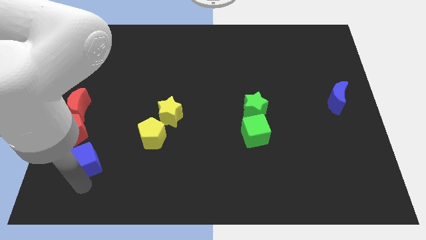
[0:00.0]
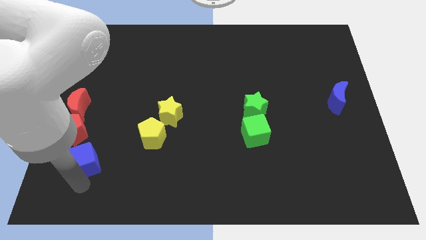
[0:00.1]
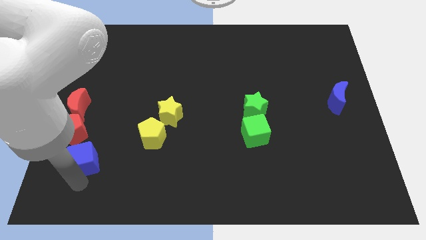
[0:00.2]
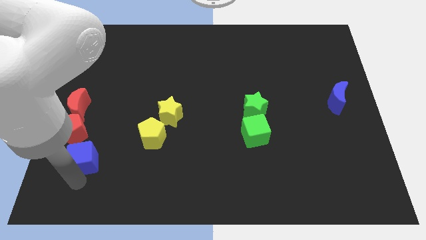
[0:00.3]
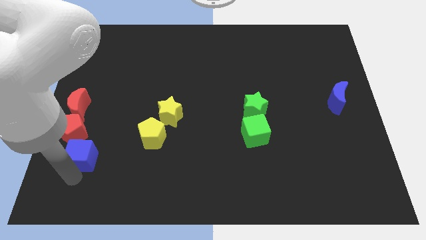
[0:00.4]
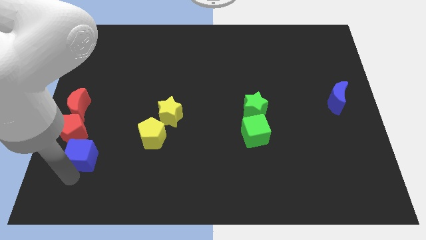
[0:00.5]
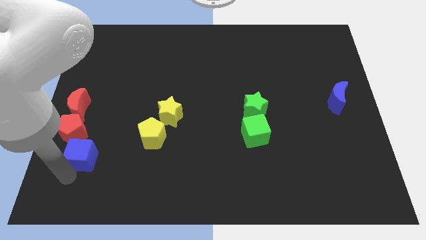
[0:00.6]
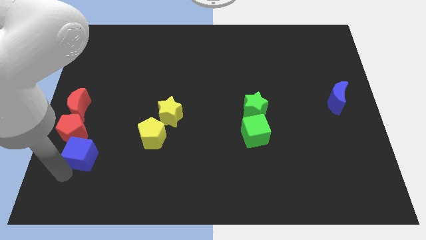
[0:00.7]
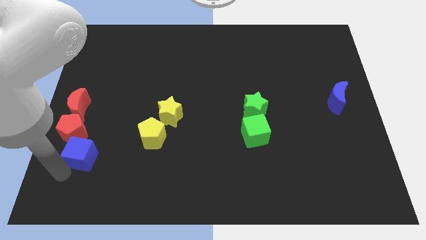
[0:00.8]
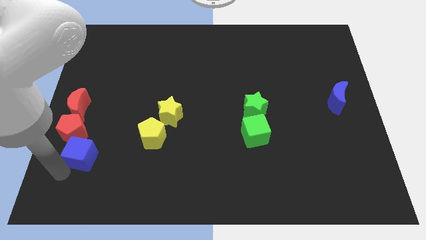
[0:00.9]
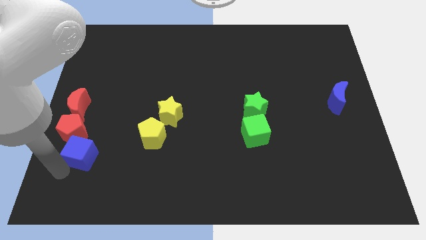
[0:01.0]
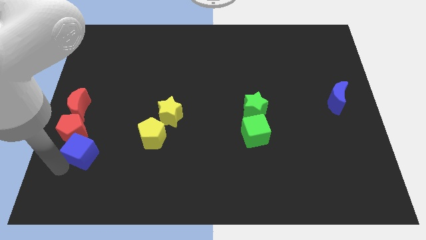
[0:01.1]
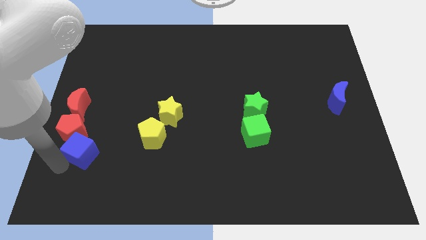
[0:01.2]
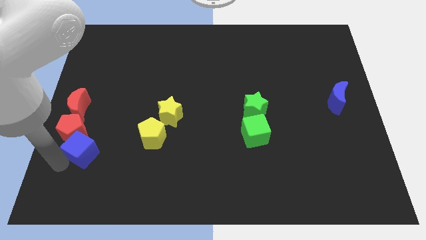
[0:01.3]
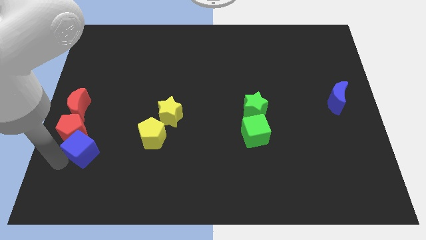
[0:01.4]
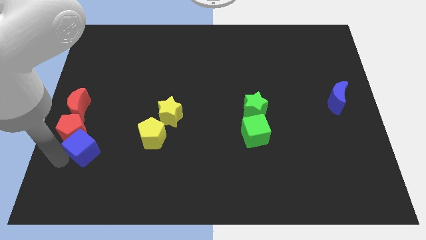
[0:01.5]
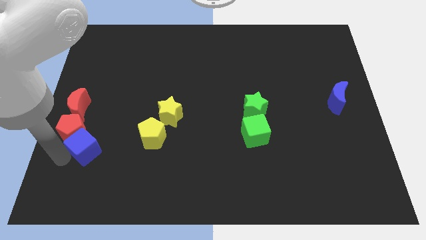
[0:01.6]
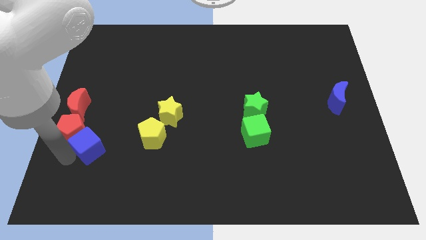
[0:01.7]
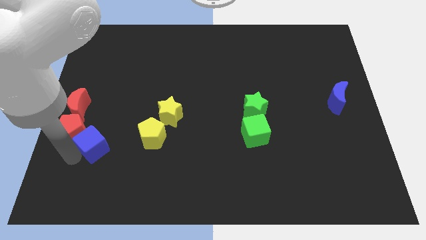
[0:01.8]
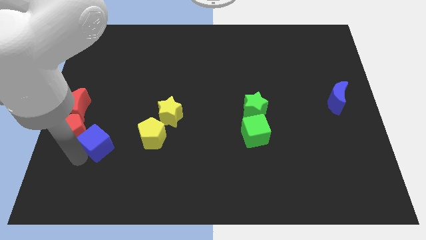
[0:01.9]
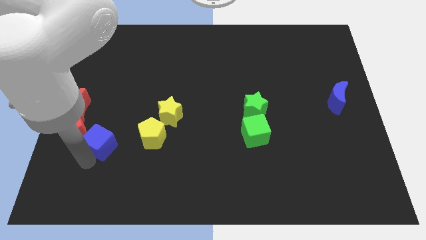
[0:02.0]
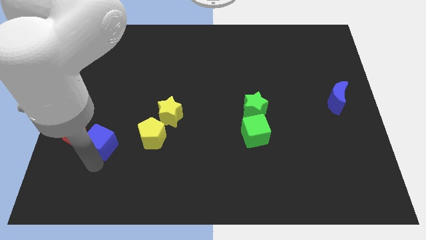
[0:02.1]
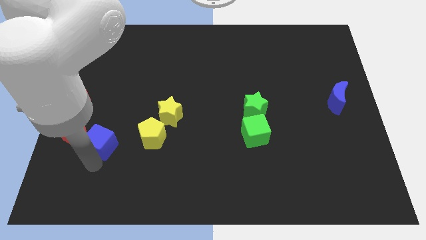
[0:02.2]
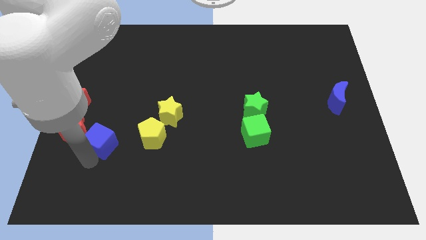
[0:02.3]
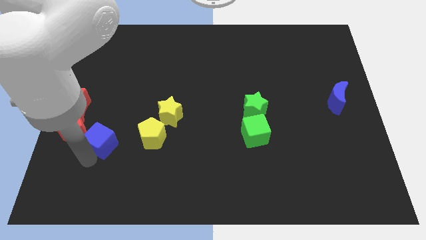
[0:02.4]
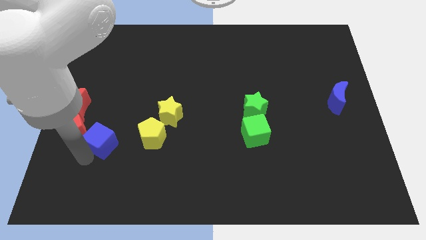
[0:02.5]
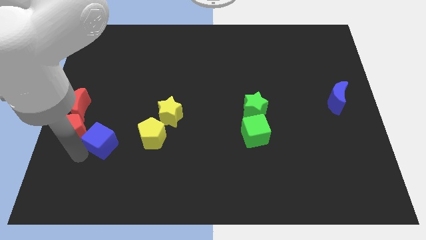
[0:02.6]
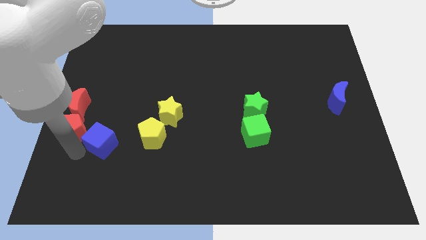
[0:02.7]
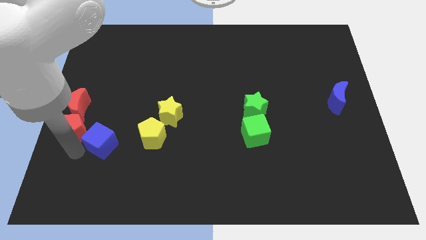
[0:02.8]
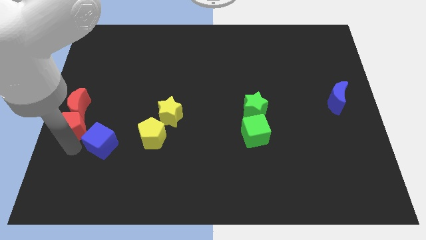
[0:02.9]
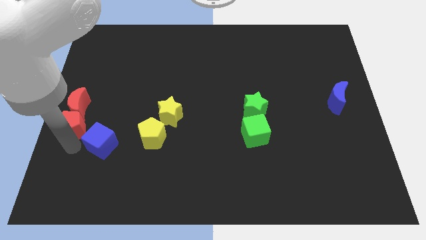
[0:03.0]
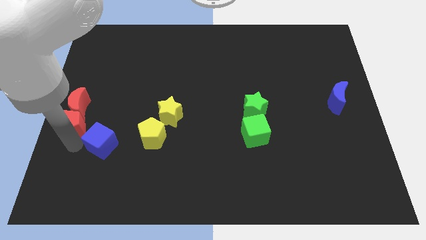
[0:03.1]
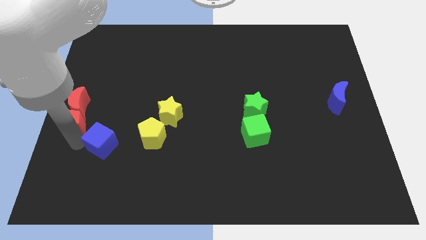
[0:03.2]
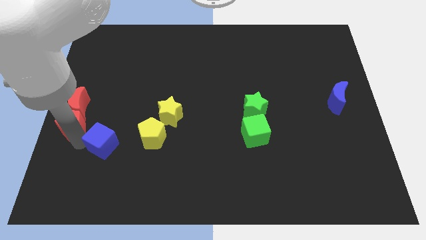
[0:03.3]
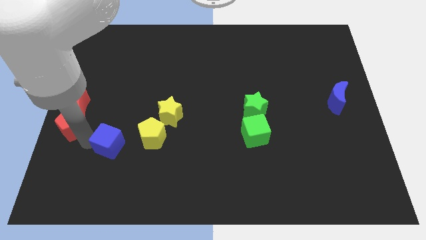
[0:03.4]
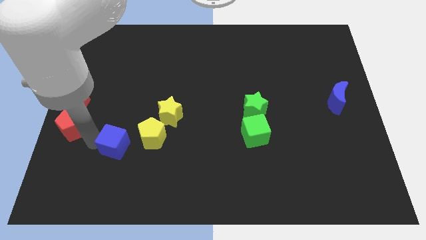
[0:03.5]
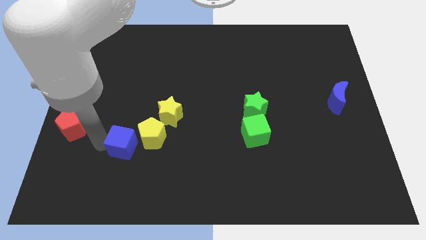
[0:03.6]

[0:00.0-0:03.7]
slide the blue cube close to the yellow pentagon

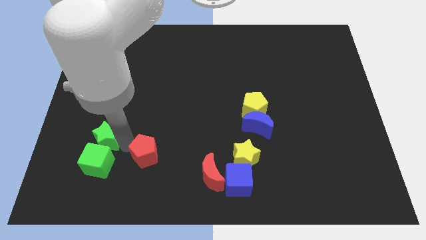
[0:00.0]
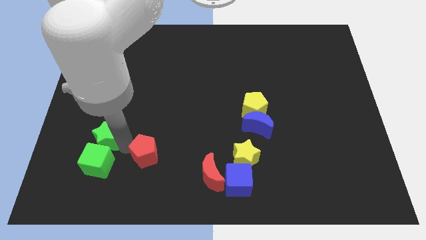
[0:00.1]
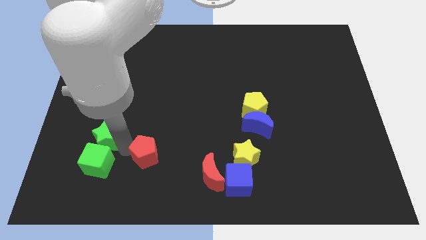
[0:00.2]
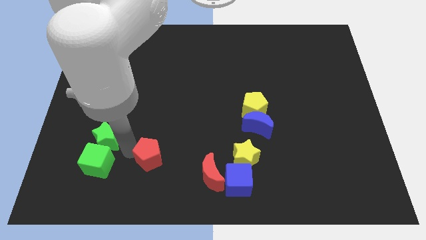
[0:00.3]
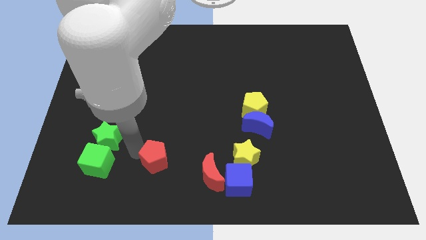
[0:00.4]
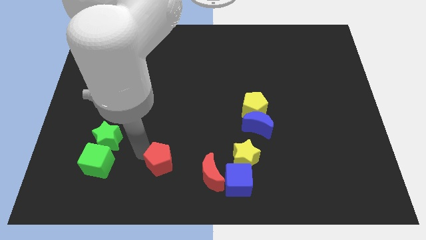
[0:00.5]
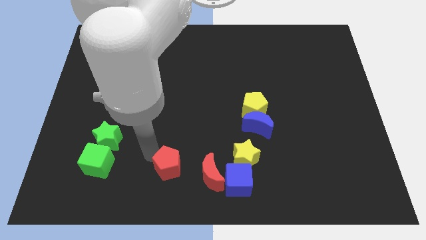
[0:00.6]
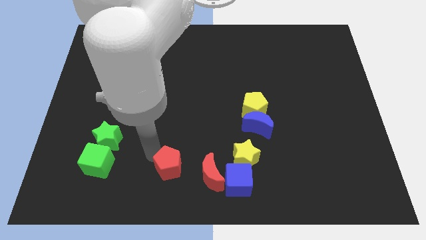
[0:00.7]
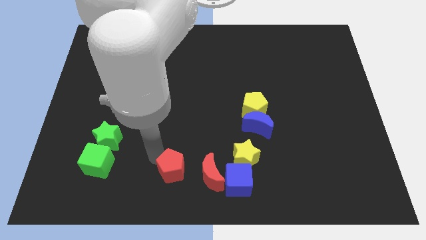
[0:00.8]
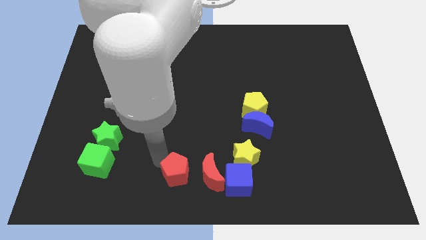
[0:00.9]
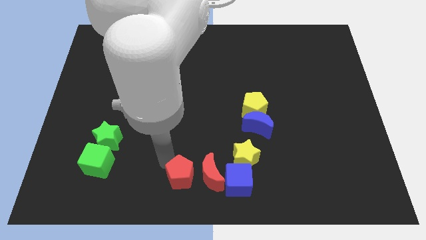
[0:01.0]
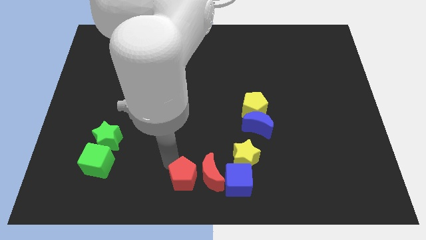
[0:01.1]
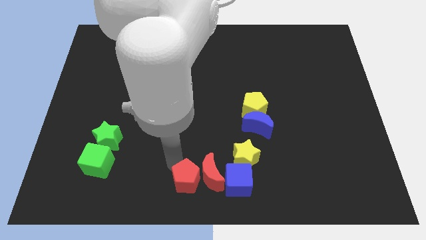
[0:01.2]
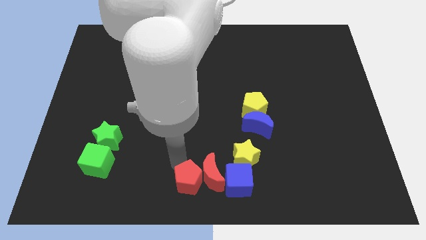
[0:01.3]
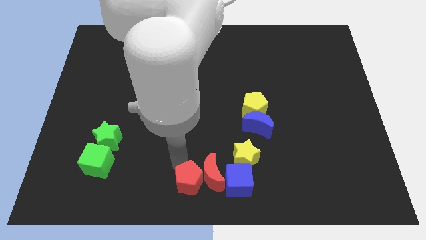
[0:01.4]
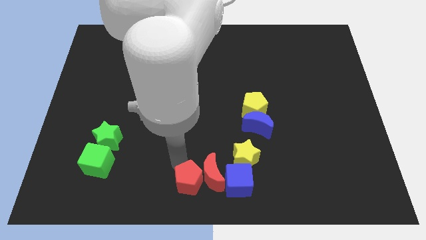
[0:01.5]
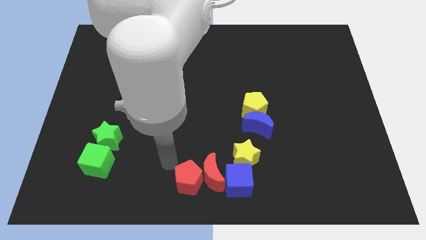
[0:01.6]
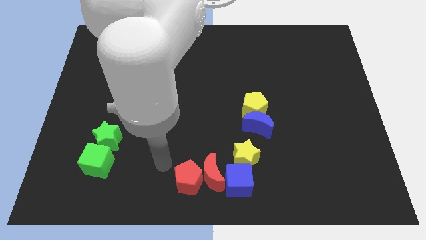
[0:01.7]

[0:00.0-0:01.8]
push the red pentagon into red moon

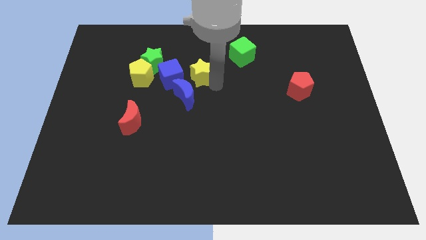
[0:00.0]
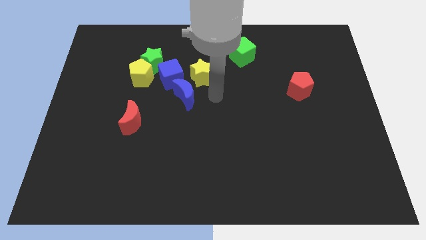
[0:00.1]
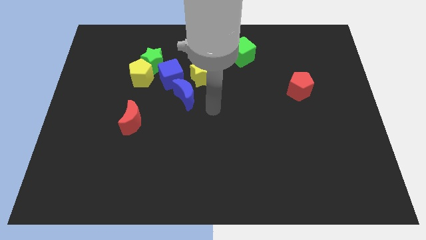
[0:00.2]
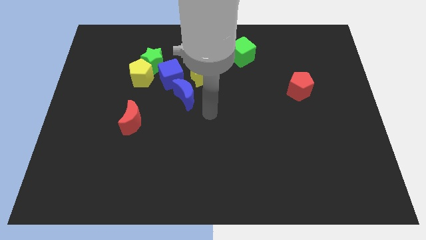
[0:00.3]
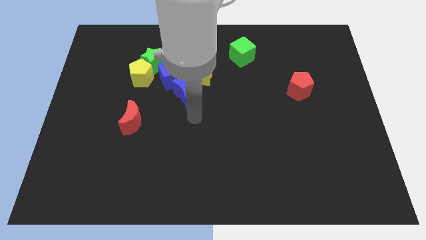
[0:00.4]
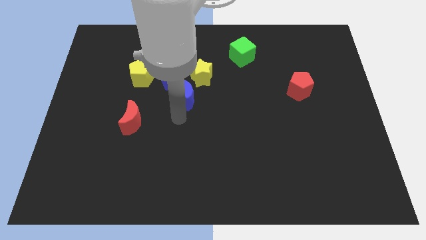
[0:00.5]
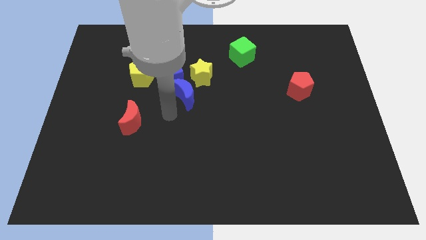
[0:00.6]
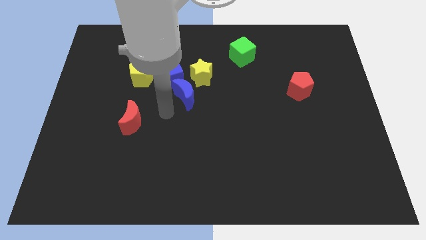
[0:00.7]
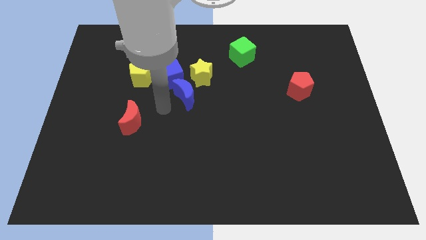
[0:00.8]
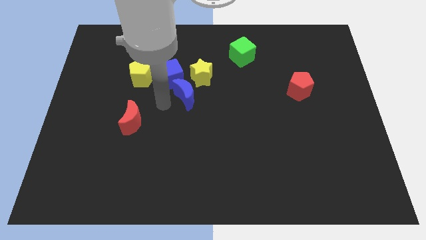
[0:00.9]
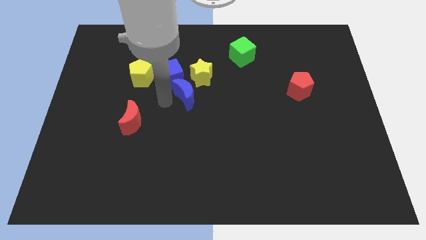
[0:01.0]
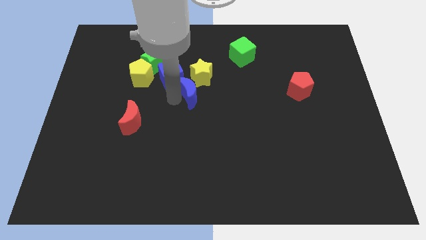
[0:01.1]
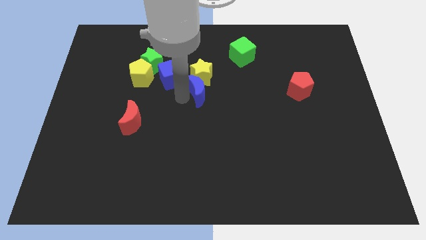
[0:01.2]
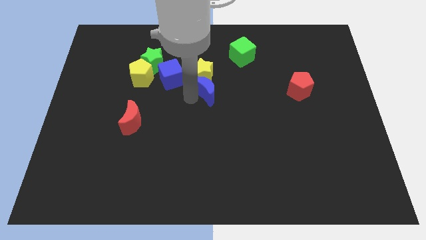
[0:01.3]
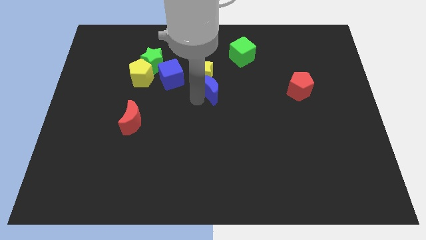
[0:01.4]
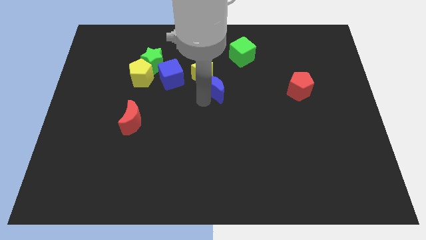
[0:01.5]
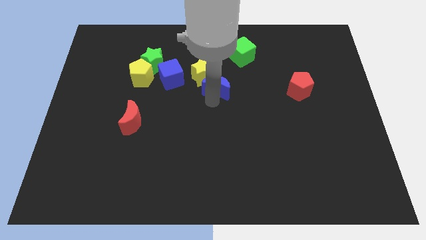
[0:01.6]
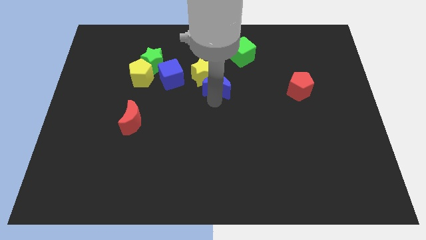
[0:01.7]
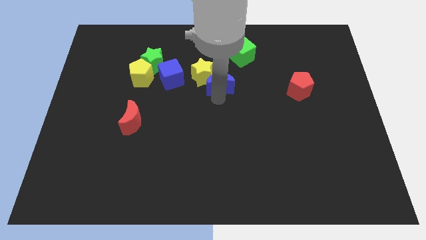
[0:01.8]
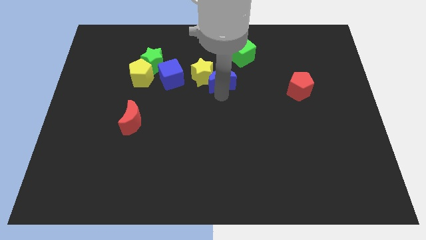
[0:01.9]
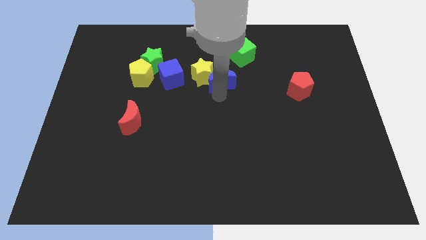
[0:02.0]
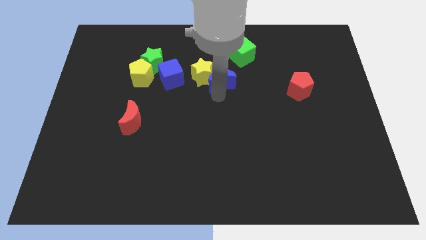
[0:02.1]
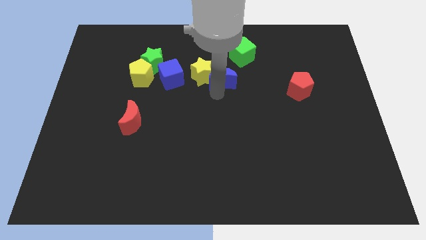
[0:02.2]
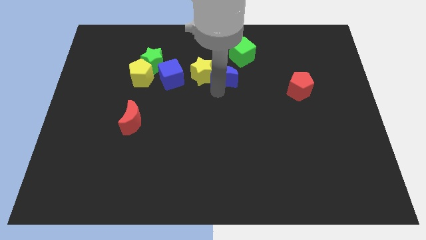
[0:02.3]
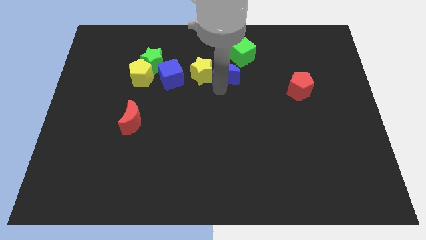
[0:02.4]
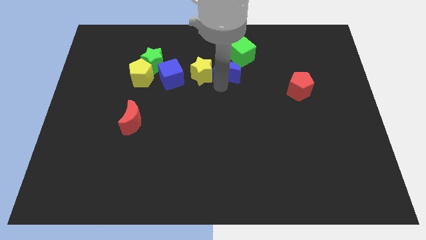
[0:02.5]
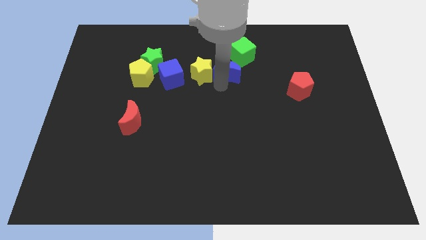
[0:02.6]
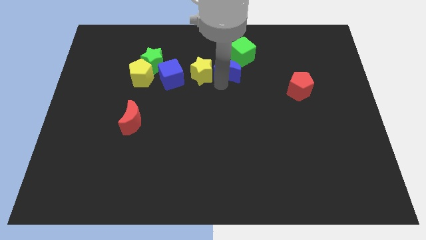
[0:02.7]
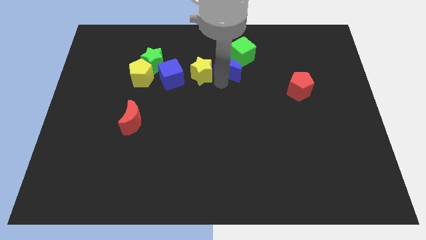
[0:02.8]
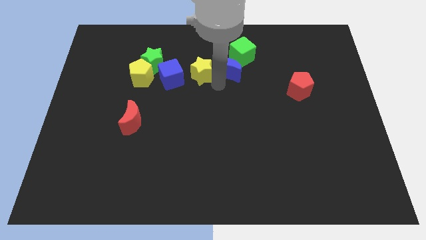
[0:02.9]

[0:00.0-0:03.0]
place the blue crescent at the bottom of green cube

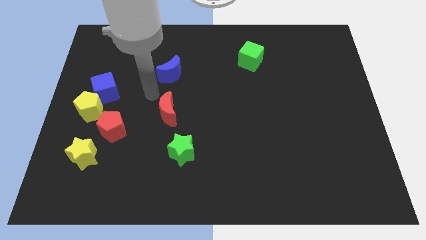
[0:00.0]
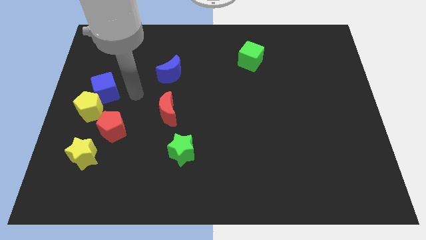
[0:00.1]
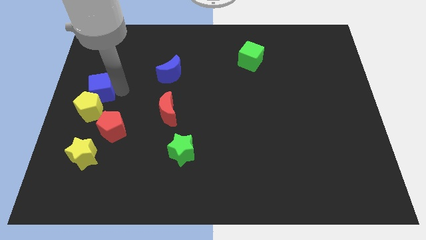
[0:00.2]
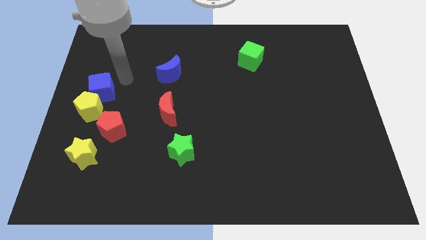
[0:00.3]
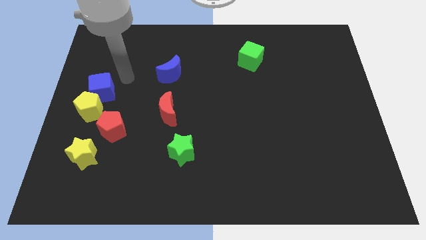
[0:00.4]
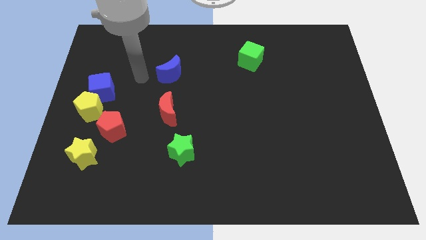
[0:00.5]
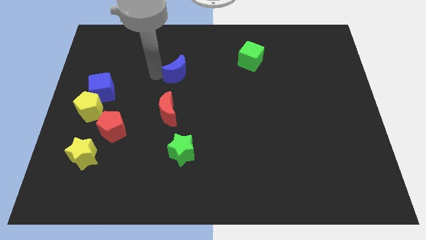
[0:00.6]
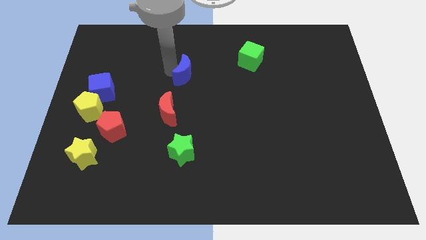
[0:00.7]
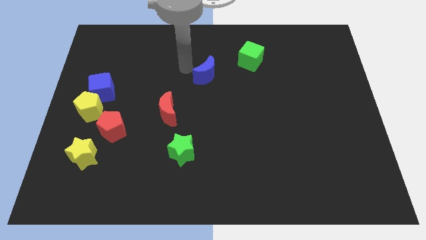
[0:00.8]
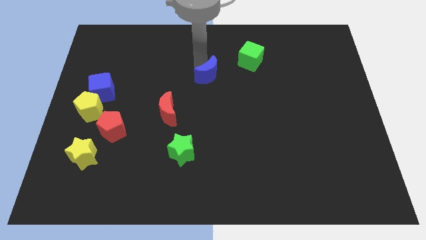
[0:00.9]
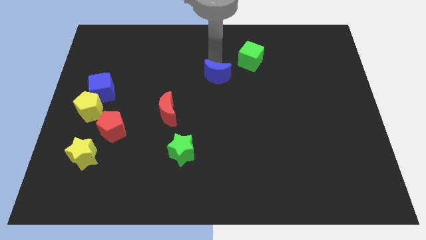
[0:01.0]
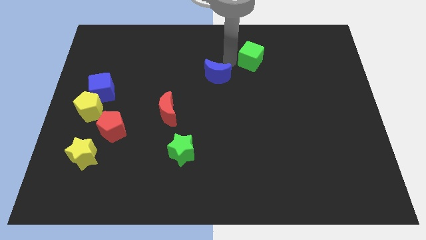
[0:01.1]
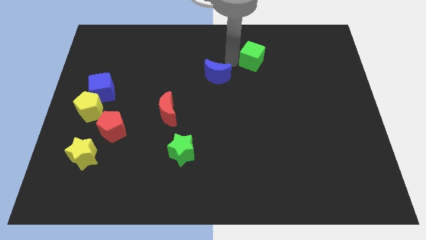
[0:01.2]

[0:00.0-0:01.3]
push the blue crescent towards the green cube
